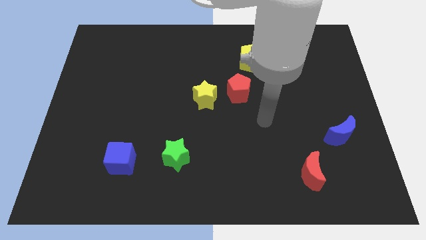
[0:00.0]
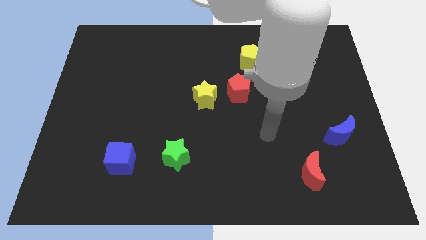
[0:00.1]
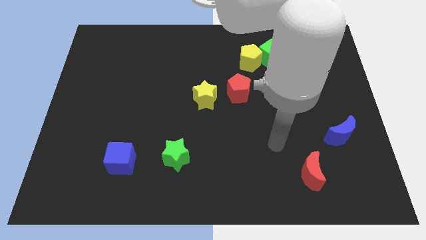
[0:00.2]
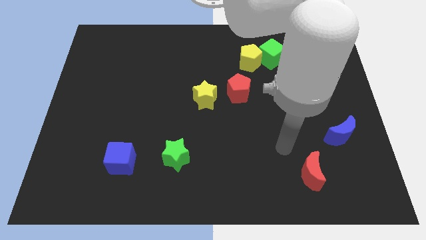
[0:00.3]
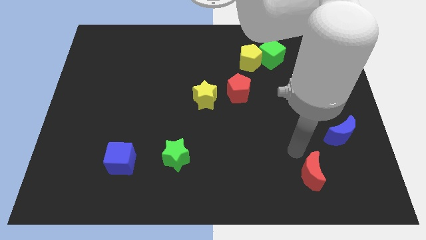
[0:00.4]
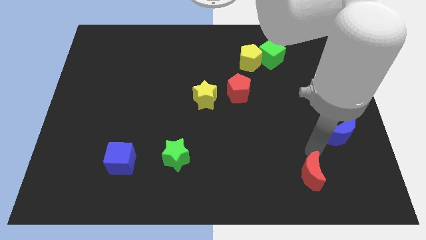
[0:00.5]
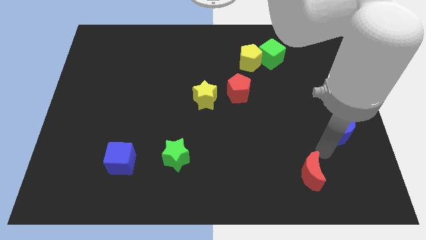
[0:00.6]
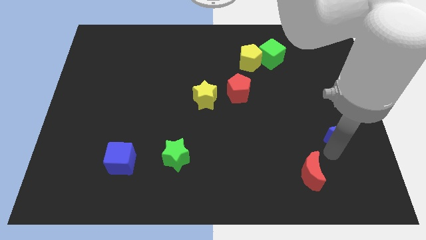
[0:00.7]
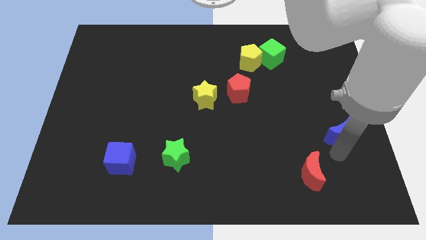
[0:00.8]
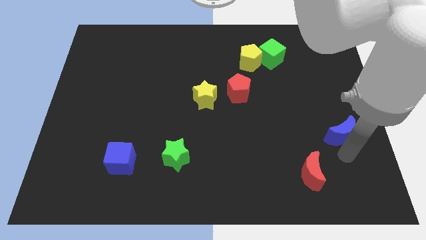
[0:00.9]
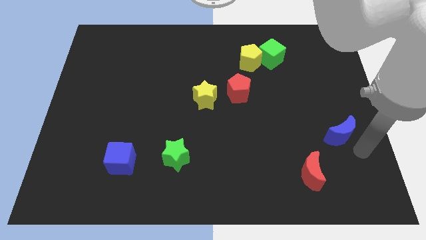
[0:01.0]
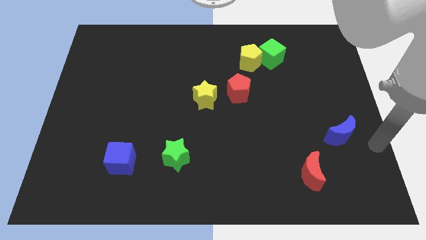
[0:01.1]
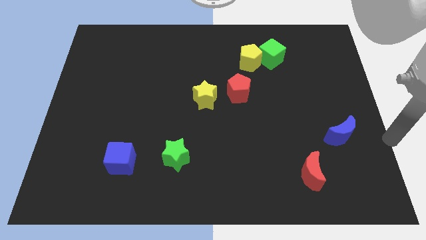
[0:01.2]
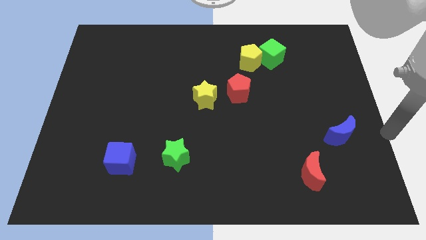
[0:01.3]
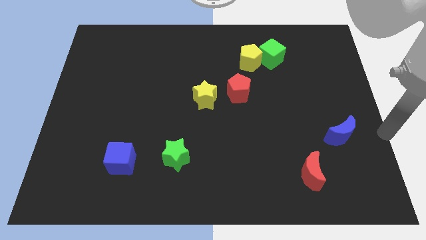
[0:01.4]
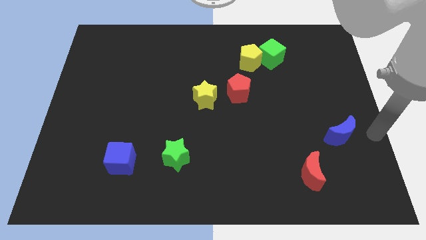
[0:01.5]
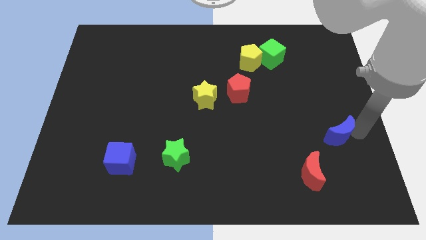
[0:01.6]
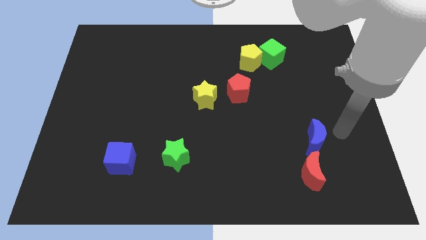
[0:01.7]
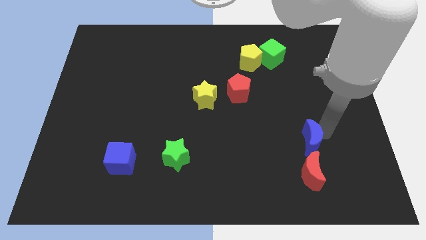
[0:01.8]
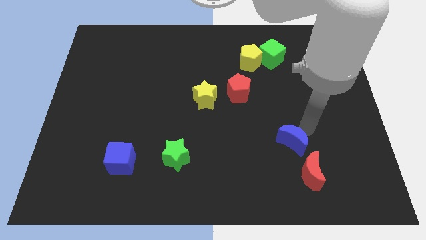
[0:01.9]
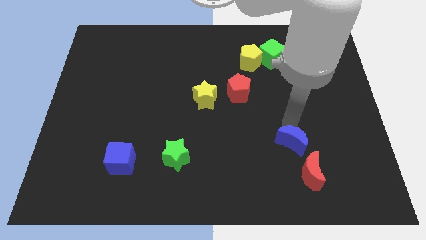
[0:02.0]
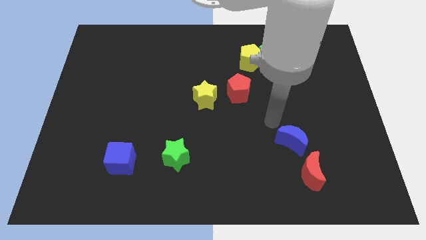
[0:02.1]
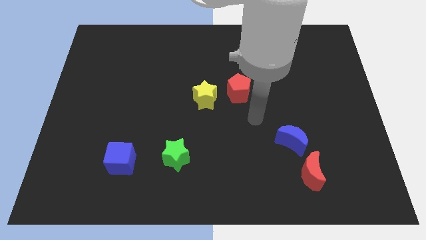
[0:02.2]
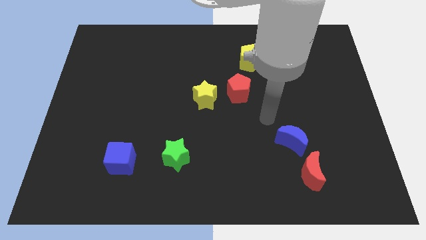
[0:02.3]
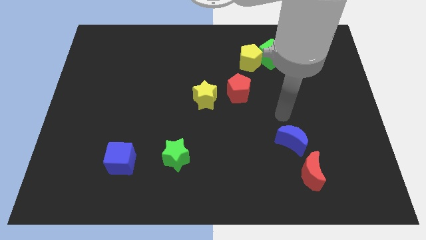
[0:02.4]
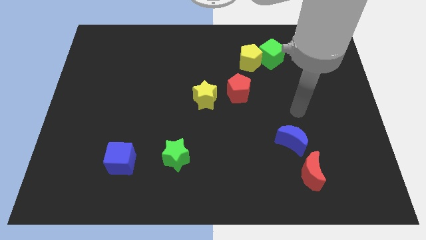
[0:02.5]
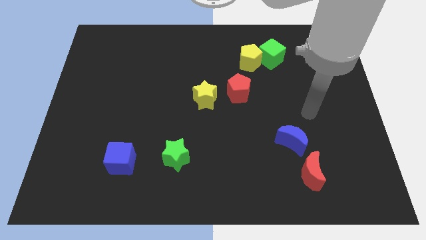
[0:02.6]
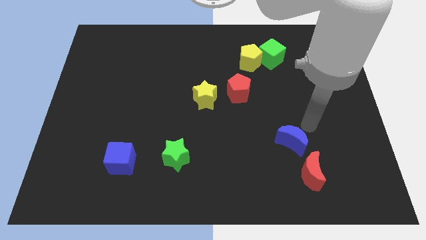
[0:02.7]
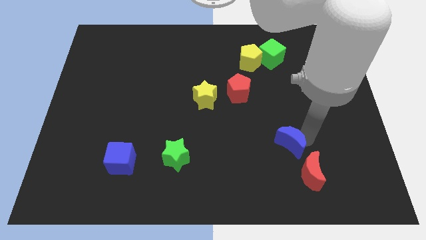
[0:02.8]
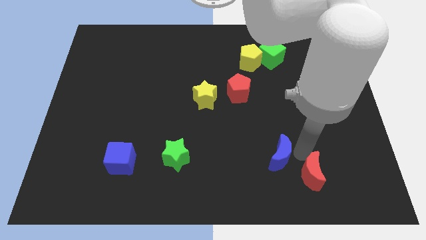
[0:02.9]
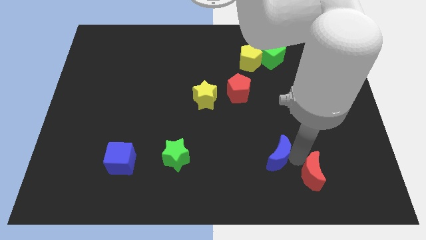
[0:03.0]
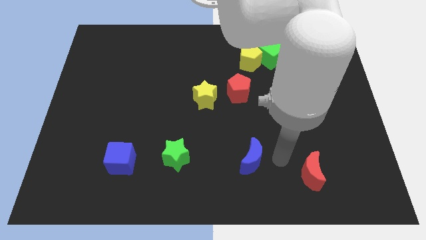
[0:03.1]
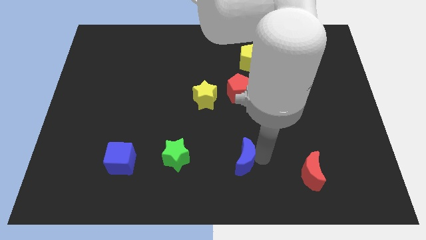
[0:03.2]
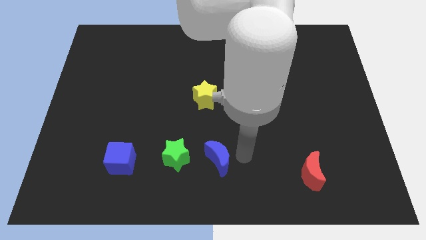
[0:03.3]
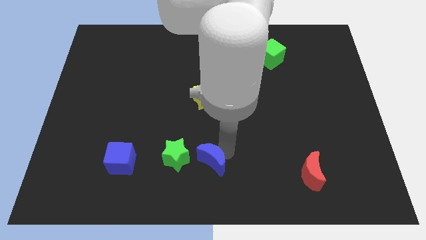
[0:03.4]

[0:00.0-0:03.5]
place blue crescent below yellow star

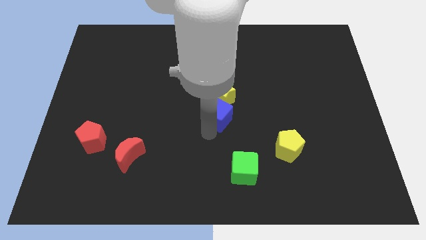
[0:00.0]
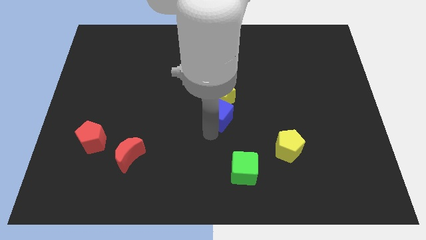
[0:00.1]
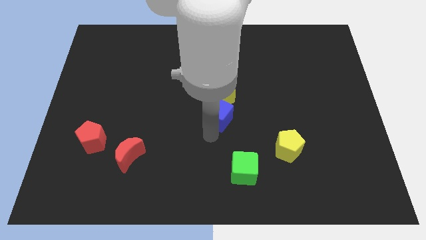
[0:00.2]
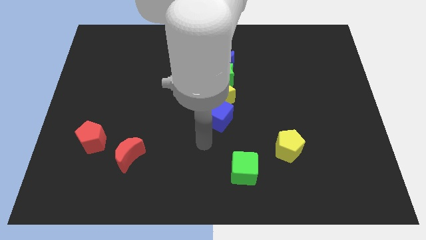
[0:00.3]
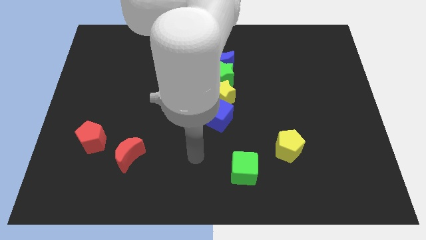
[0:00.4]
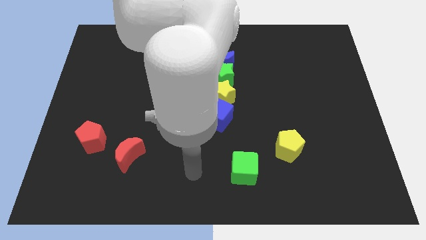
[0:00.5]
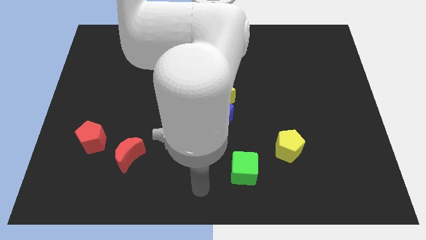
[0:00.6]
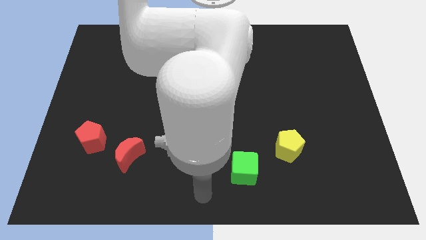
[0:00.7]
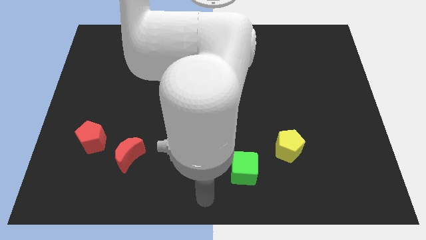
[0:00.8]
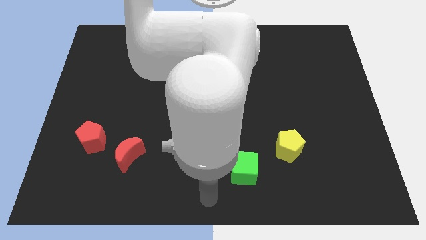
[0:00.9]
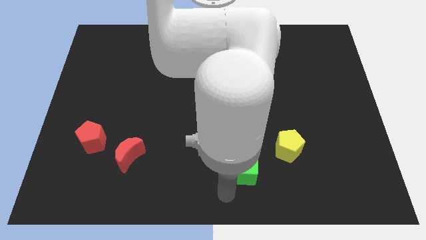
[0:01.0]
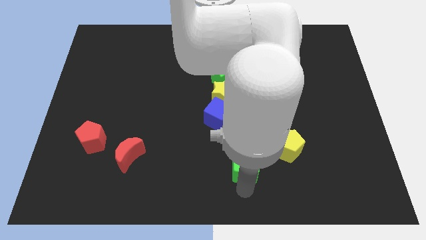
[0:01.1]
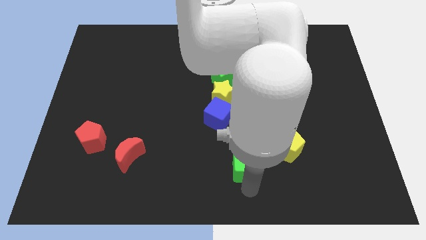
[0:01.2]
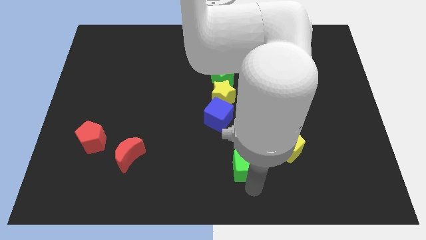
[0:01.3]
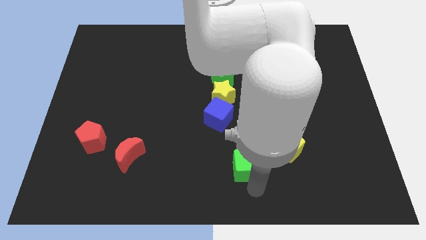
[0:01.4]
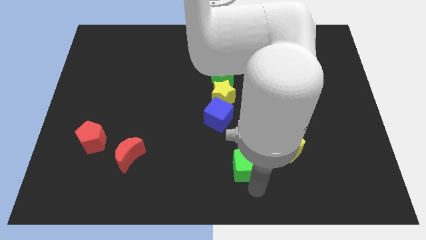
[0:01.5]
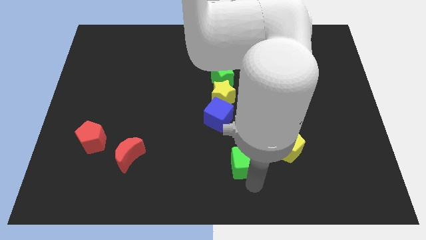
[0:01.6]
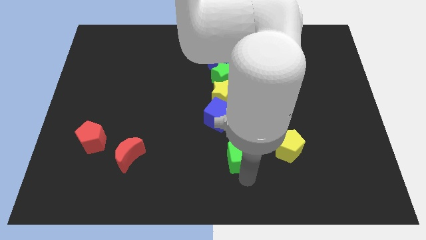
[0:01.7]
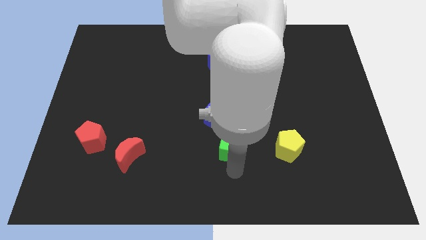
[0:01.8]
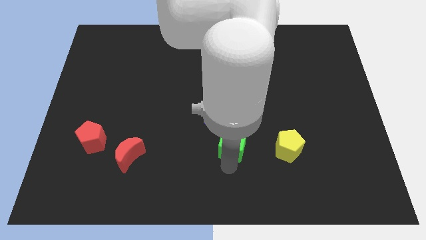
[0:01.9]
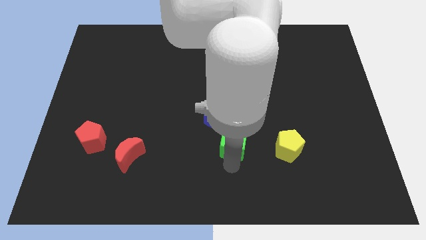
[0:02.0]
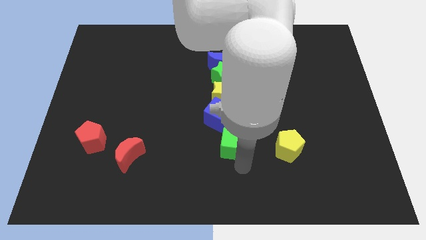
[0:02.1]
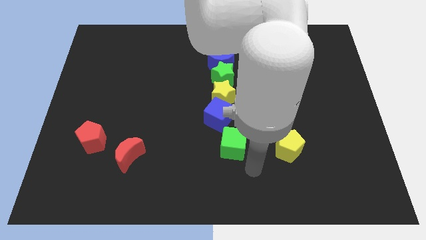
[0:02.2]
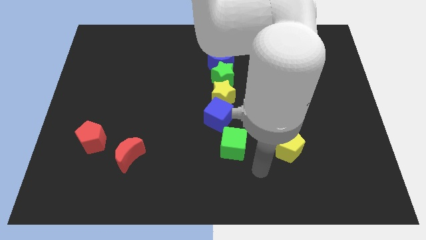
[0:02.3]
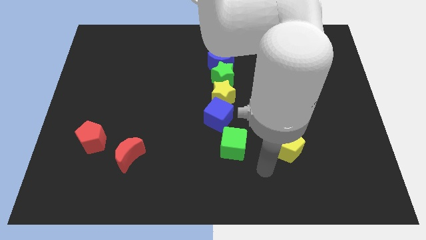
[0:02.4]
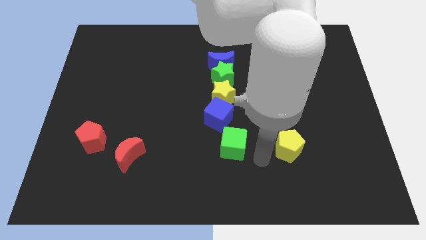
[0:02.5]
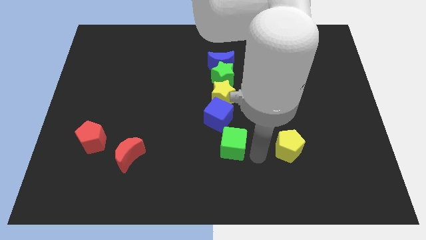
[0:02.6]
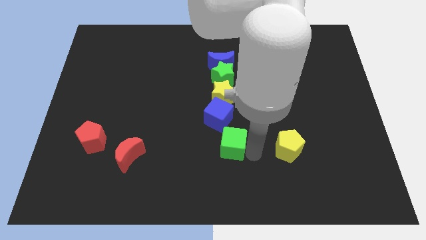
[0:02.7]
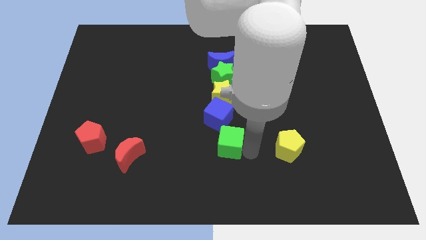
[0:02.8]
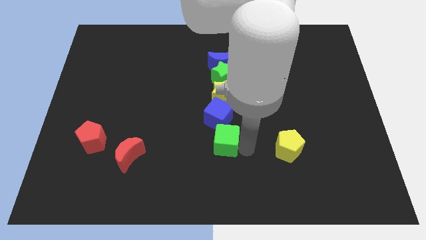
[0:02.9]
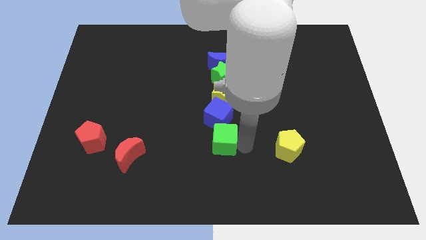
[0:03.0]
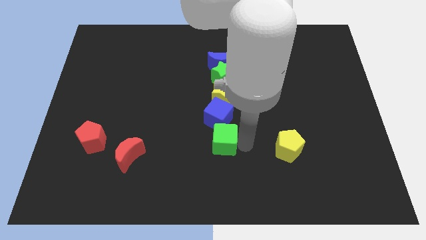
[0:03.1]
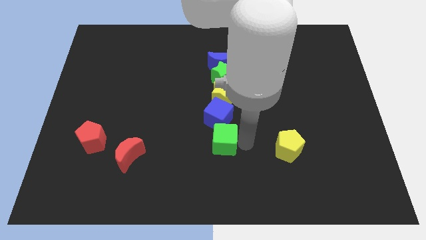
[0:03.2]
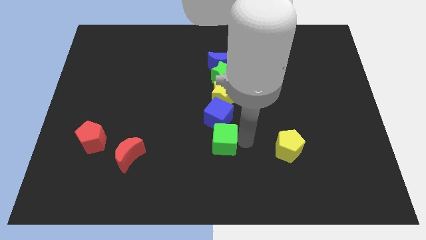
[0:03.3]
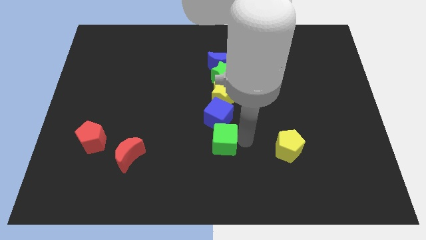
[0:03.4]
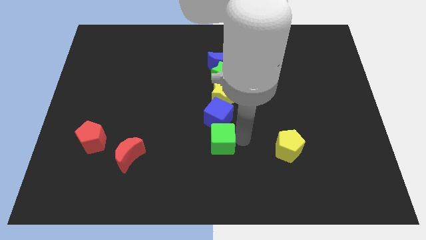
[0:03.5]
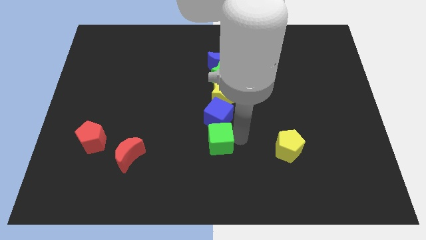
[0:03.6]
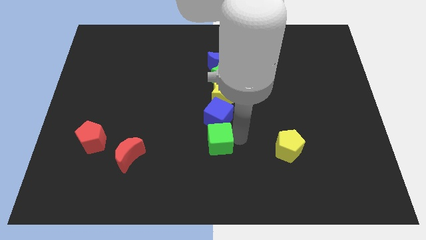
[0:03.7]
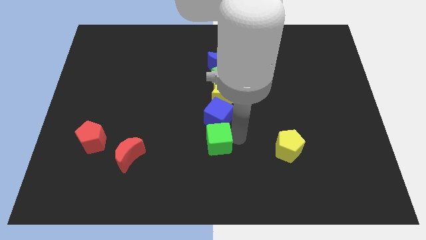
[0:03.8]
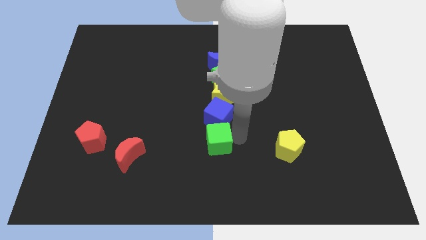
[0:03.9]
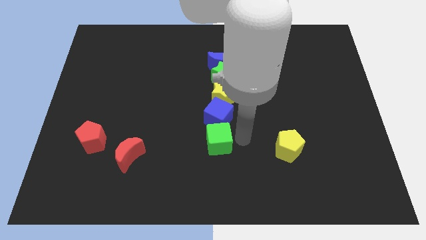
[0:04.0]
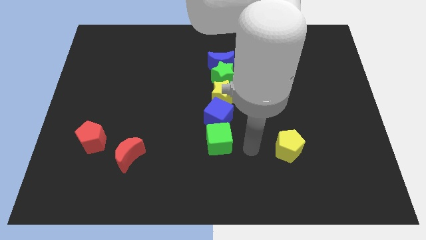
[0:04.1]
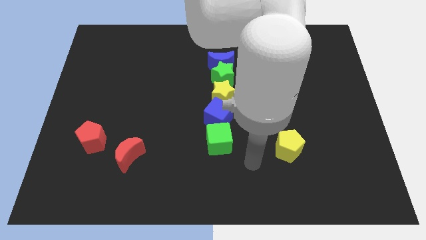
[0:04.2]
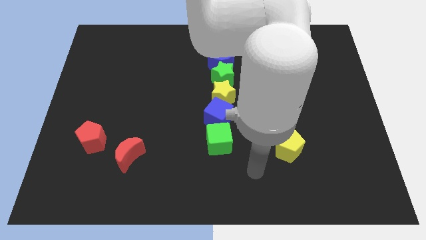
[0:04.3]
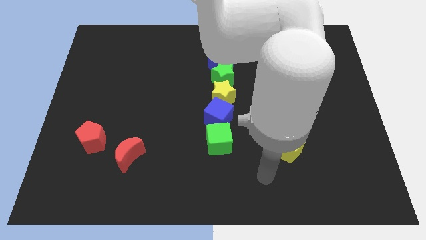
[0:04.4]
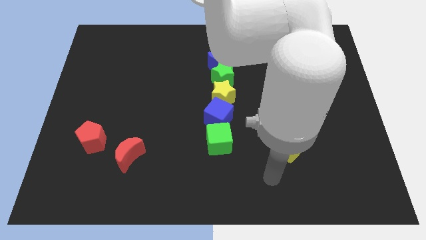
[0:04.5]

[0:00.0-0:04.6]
place the green cube to the bottom of blue cube

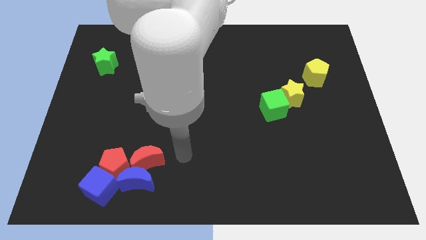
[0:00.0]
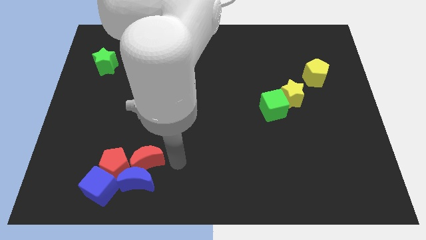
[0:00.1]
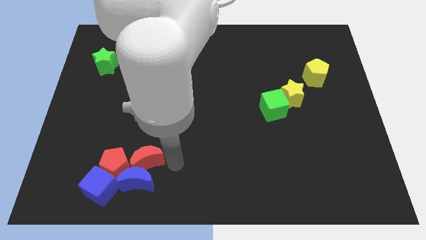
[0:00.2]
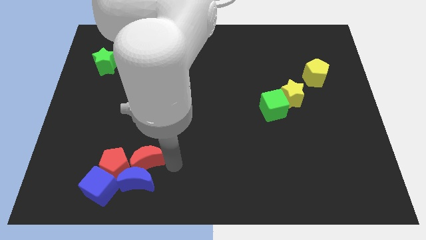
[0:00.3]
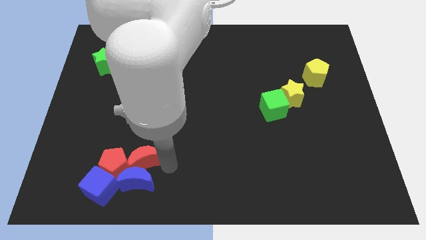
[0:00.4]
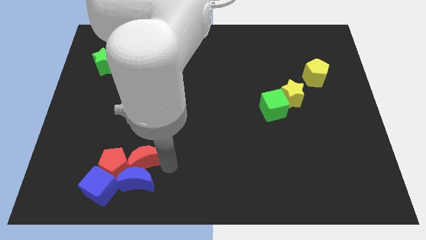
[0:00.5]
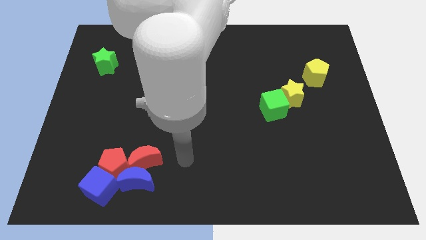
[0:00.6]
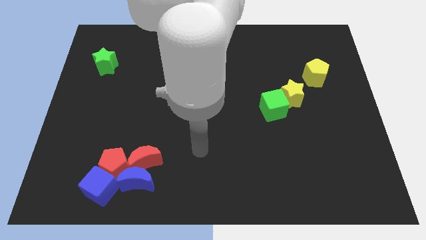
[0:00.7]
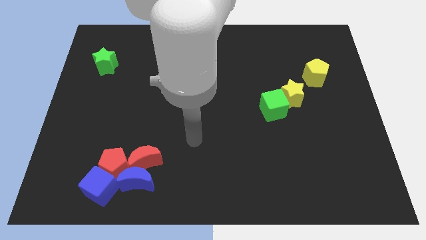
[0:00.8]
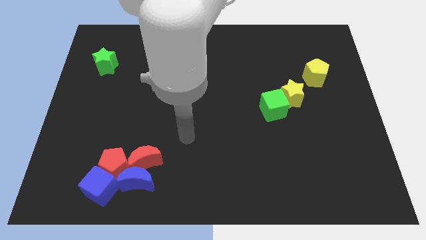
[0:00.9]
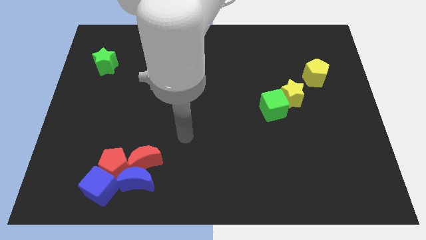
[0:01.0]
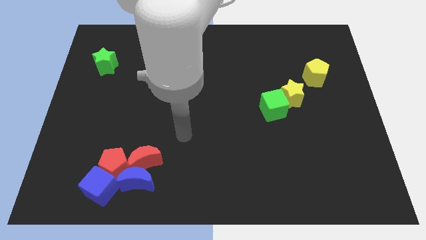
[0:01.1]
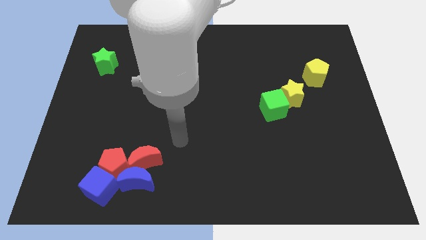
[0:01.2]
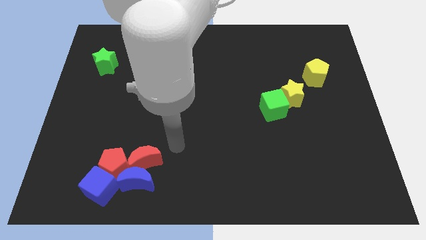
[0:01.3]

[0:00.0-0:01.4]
tap red moon slightly
